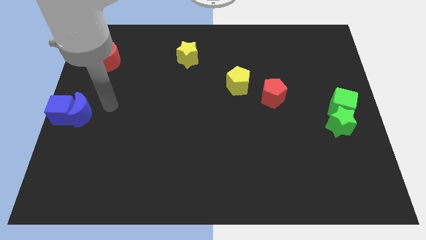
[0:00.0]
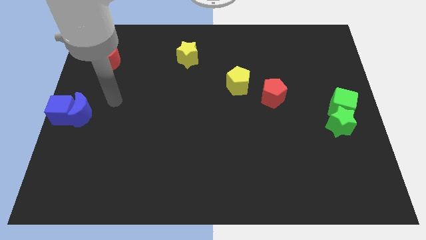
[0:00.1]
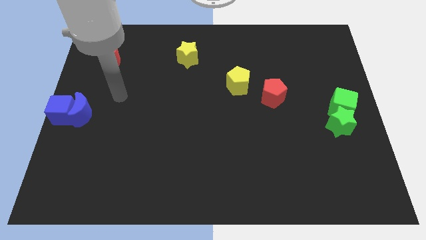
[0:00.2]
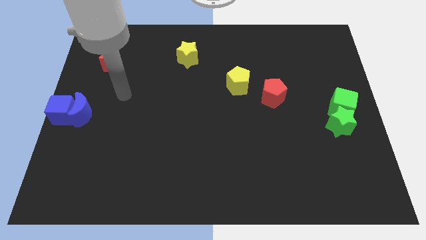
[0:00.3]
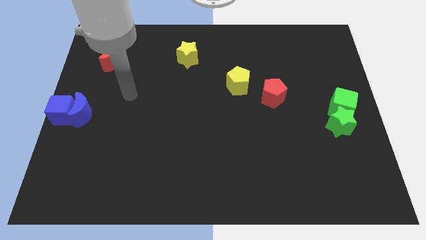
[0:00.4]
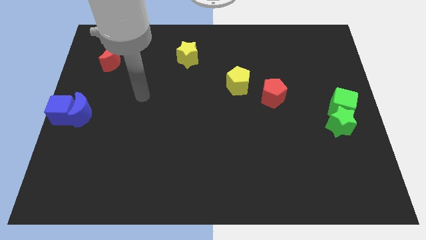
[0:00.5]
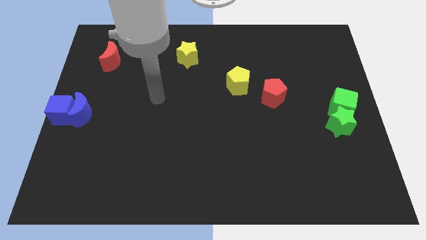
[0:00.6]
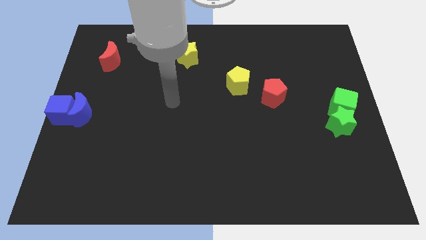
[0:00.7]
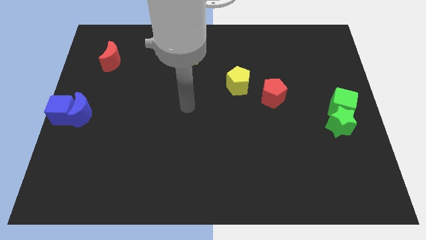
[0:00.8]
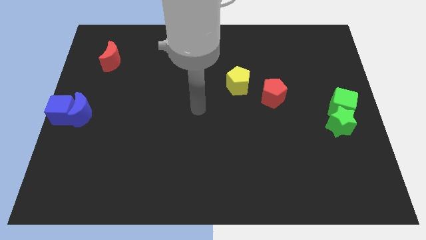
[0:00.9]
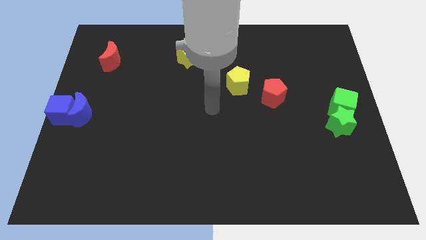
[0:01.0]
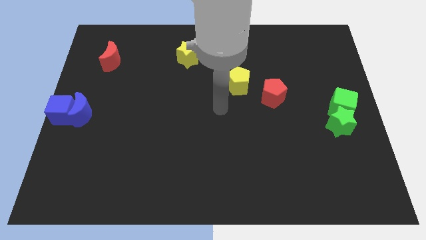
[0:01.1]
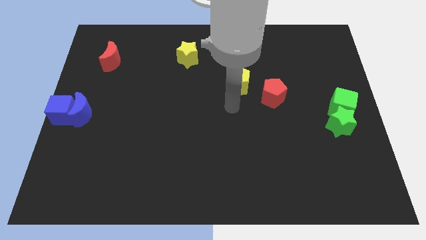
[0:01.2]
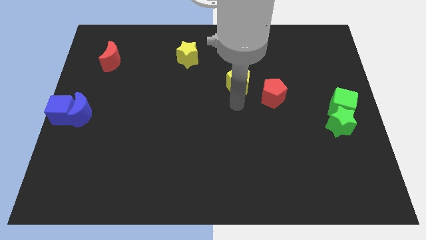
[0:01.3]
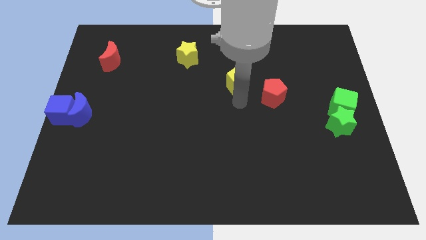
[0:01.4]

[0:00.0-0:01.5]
point your arm at the bottom side of the yellow pentagon

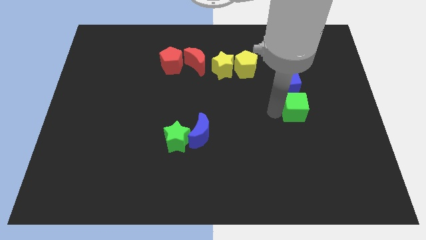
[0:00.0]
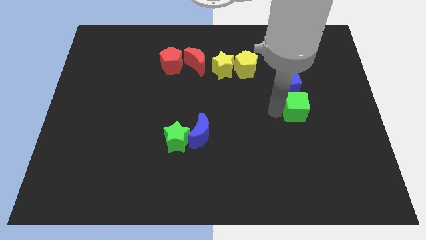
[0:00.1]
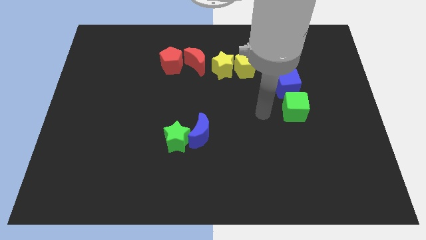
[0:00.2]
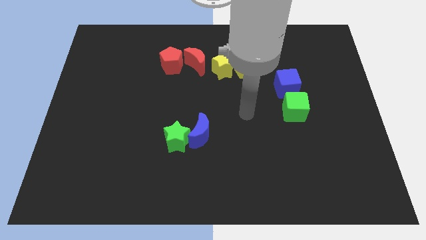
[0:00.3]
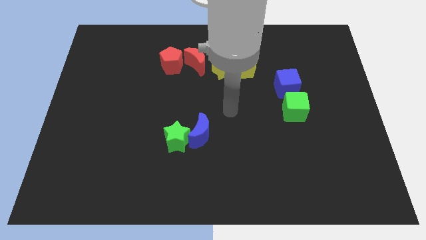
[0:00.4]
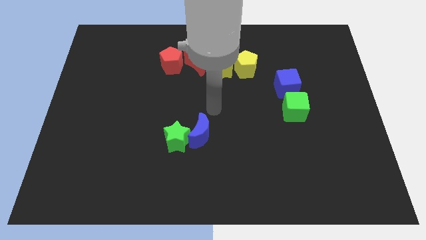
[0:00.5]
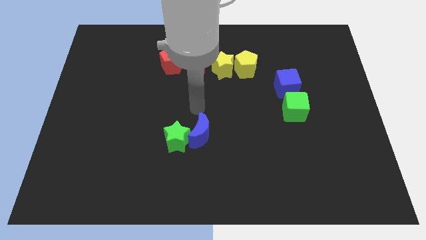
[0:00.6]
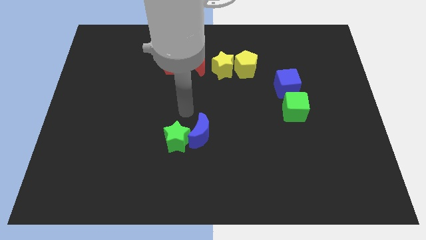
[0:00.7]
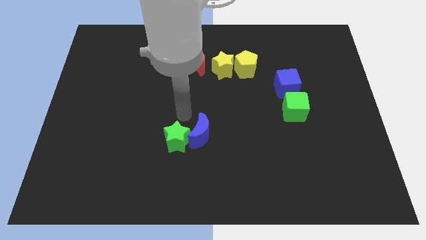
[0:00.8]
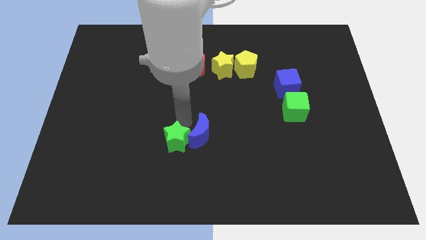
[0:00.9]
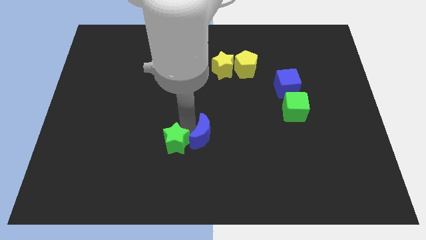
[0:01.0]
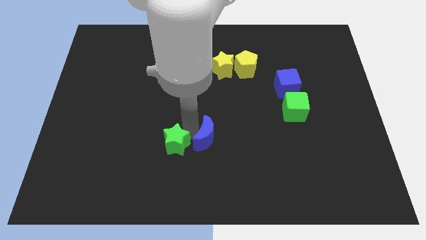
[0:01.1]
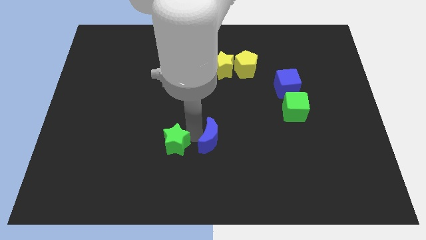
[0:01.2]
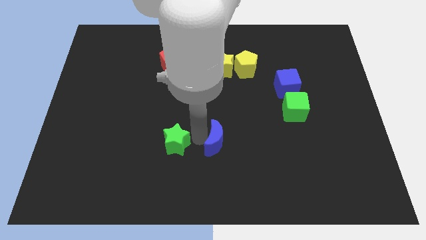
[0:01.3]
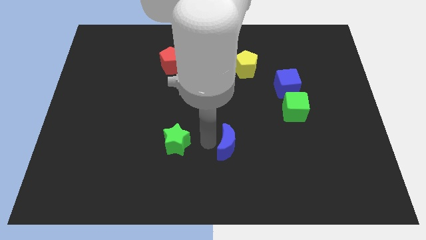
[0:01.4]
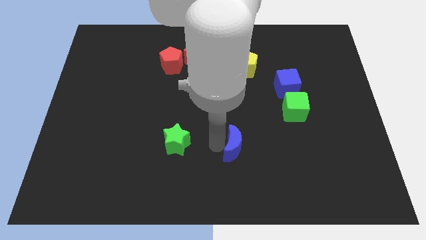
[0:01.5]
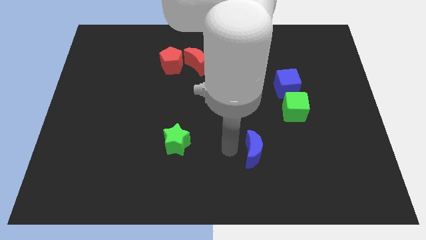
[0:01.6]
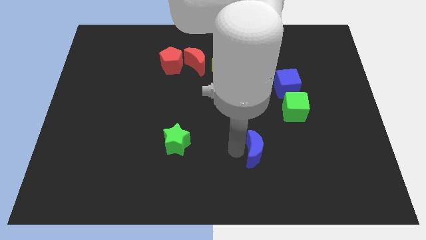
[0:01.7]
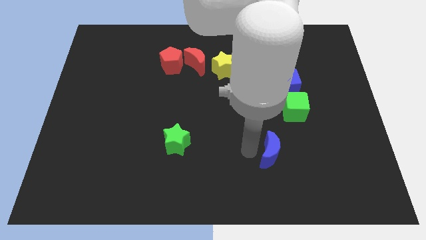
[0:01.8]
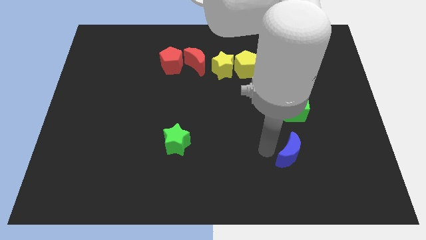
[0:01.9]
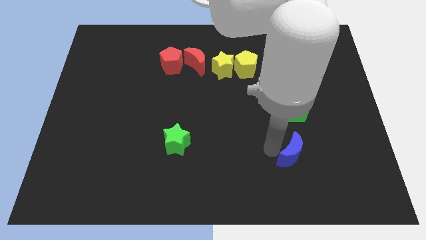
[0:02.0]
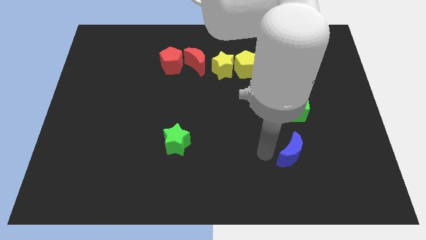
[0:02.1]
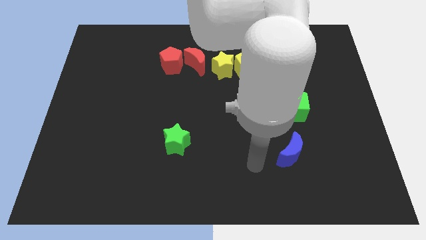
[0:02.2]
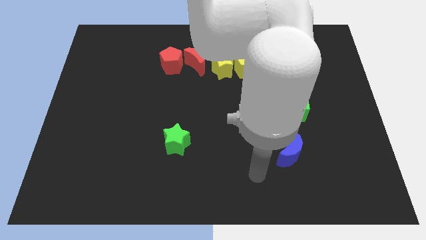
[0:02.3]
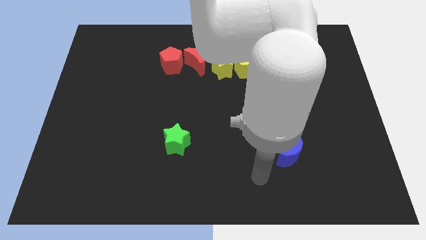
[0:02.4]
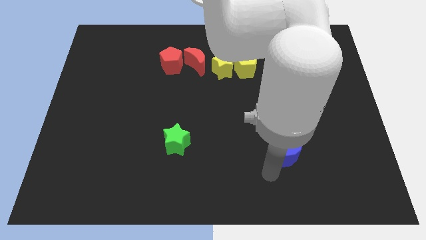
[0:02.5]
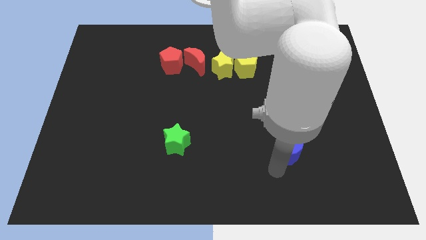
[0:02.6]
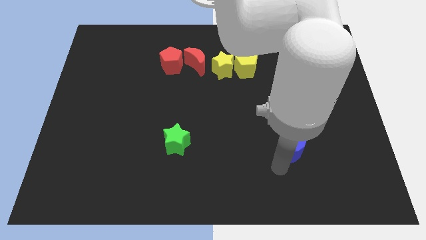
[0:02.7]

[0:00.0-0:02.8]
place blue moon to the bottom of the green cube

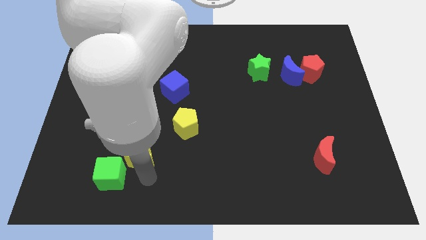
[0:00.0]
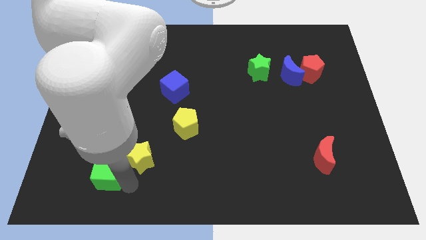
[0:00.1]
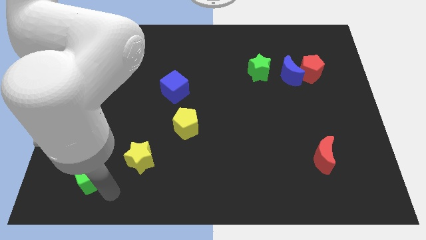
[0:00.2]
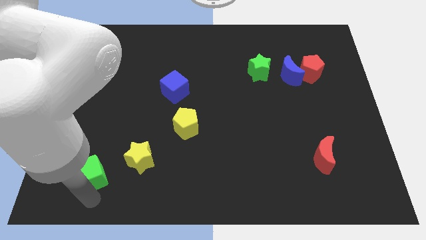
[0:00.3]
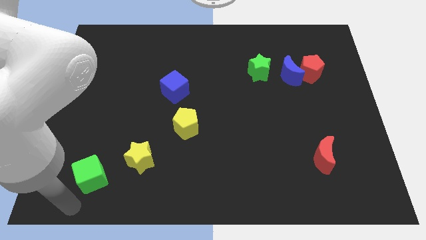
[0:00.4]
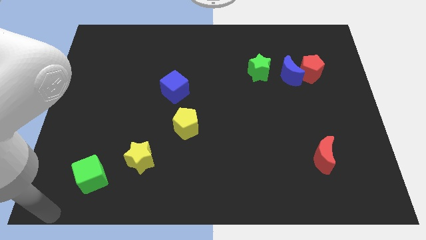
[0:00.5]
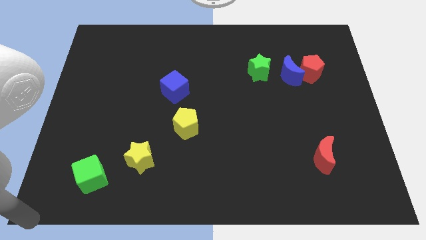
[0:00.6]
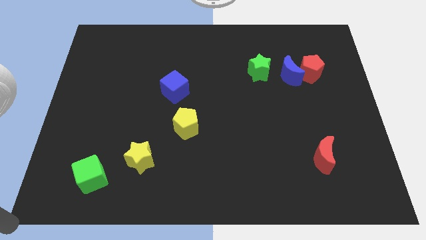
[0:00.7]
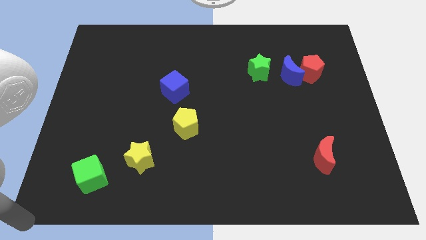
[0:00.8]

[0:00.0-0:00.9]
move your arm to the bottom left corner of the board

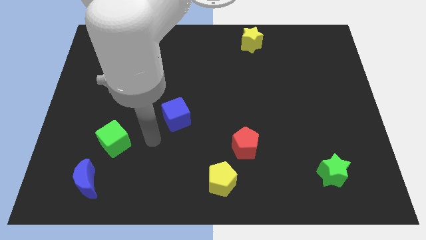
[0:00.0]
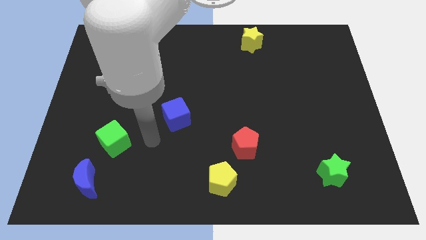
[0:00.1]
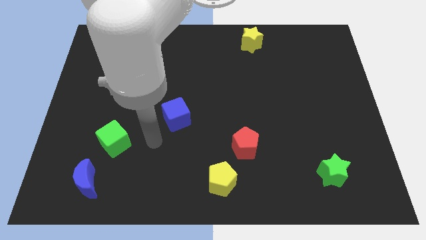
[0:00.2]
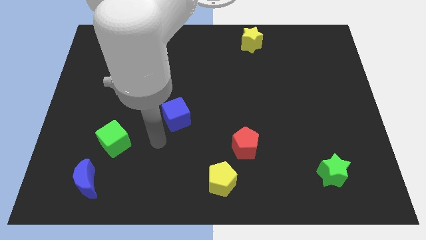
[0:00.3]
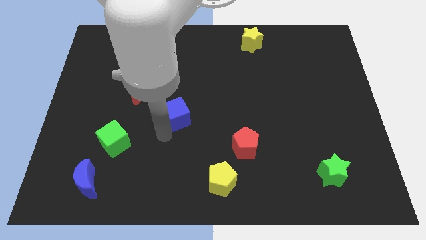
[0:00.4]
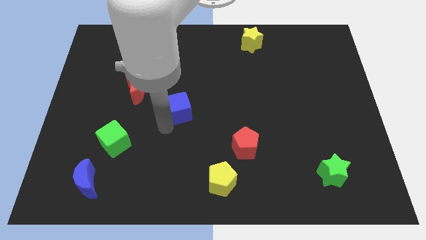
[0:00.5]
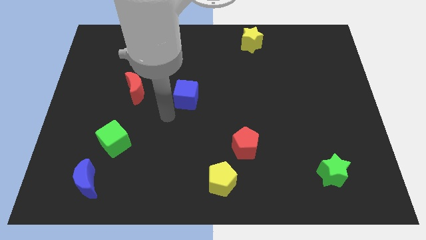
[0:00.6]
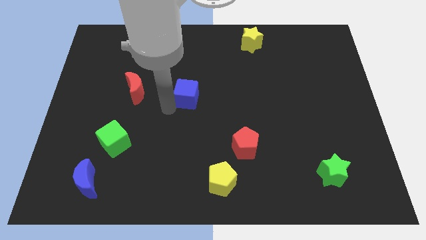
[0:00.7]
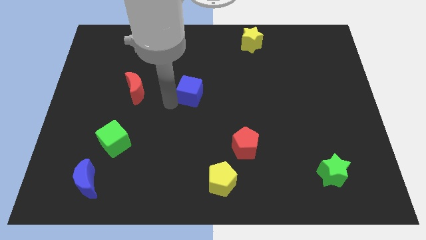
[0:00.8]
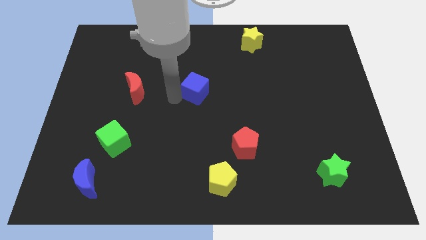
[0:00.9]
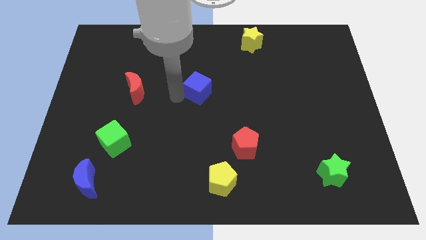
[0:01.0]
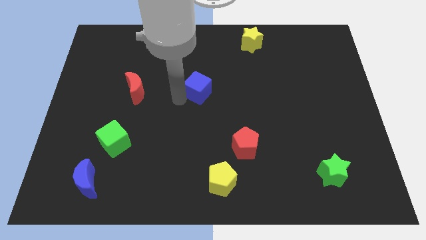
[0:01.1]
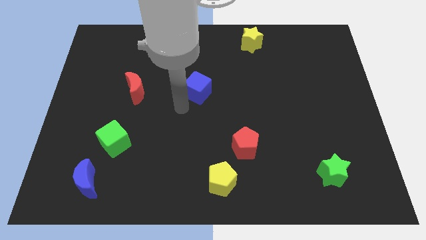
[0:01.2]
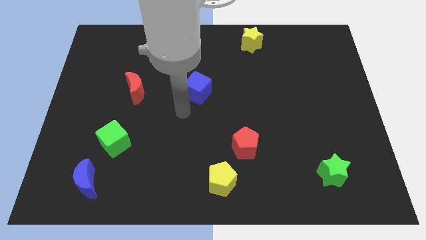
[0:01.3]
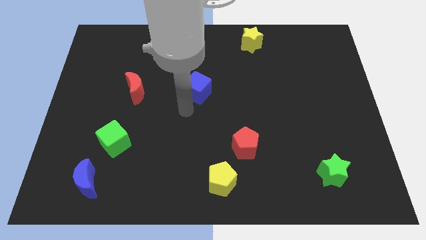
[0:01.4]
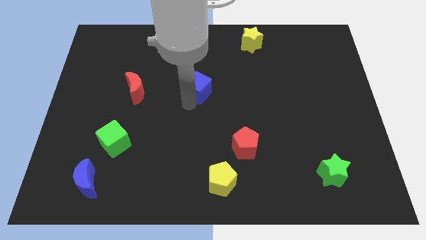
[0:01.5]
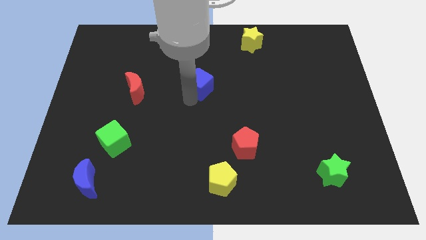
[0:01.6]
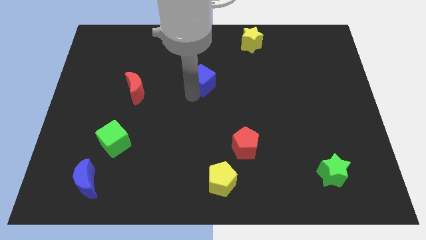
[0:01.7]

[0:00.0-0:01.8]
move the blue cube to the right of red moon

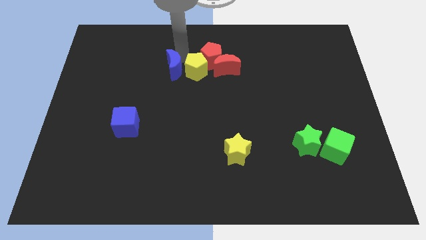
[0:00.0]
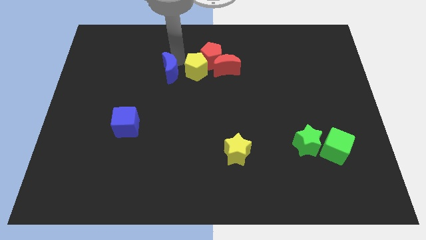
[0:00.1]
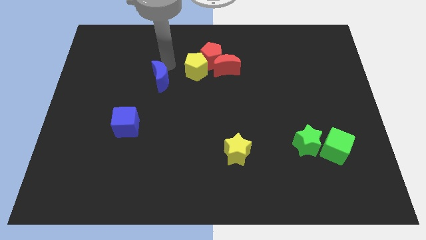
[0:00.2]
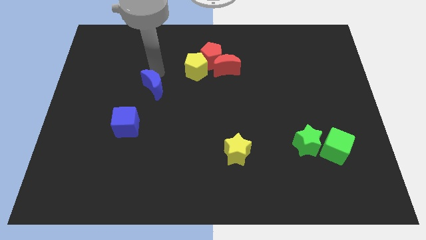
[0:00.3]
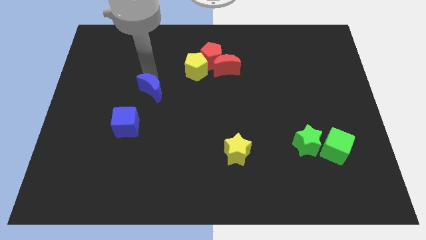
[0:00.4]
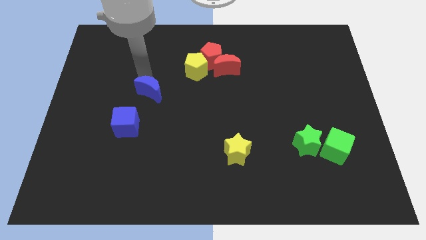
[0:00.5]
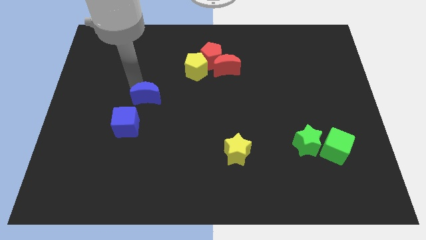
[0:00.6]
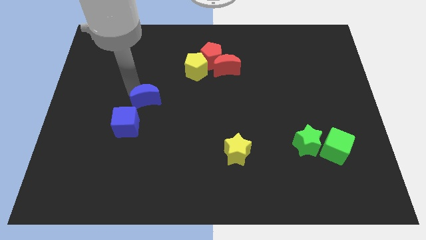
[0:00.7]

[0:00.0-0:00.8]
move the blue crescent to the top right of the blue cube

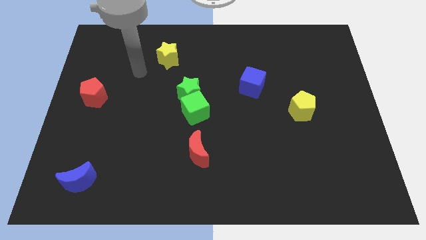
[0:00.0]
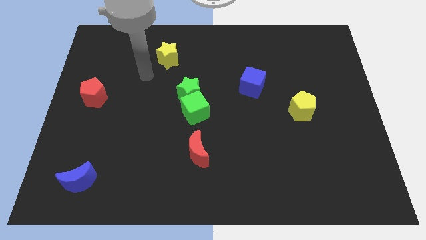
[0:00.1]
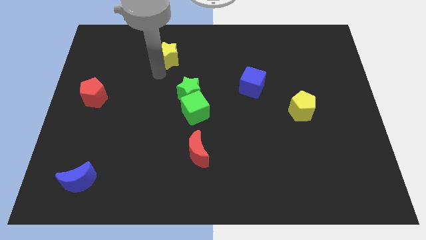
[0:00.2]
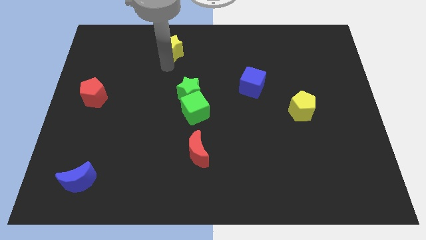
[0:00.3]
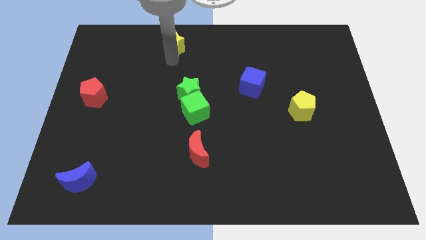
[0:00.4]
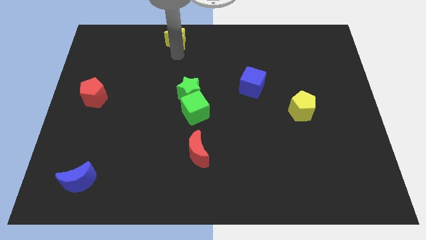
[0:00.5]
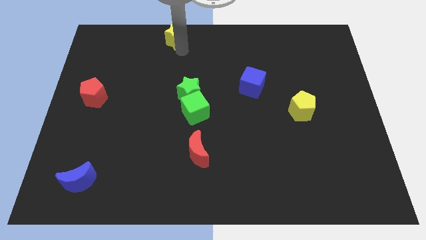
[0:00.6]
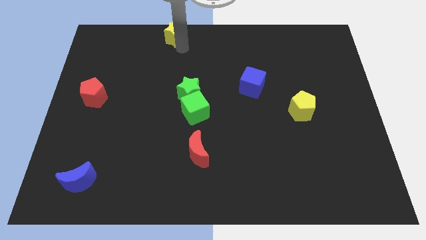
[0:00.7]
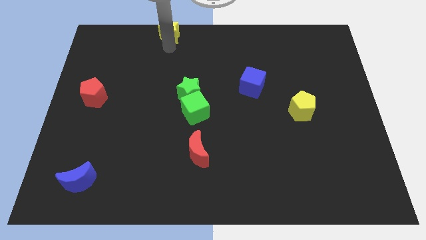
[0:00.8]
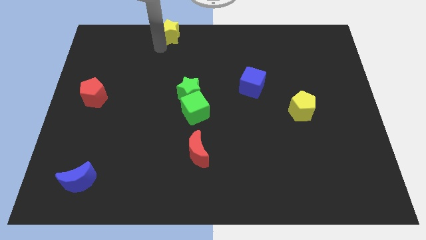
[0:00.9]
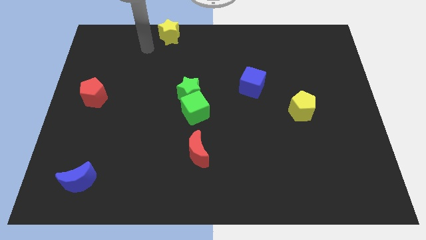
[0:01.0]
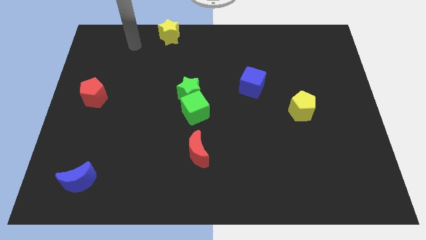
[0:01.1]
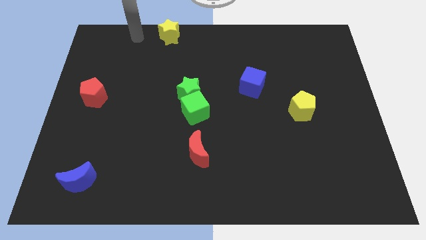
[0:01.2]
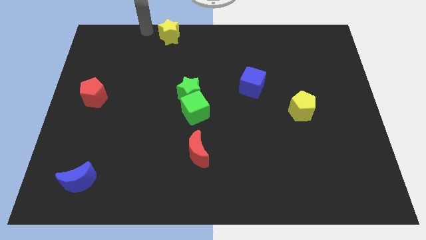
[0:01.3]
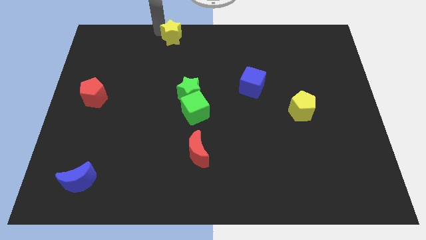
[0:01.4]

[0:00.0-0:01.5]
push the yellow star slightly to the top side of the board
